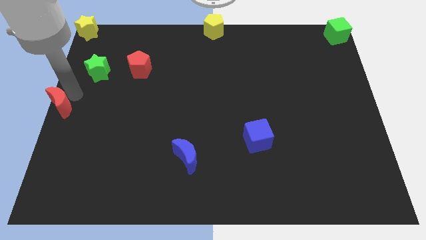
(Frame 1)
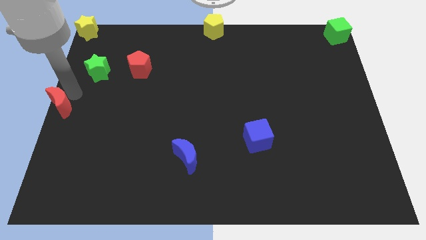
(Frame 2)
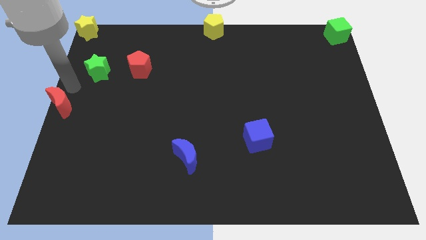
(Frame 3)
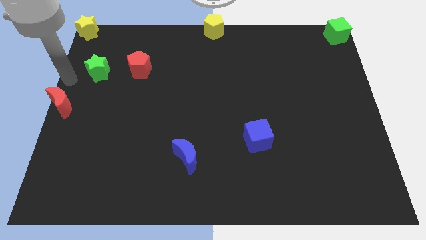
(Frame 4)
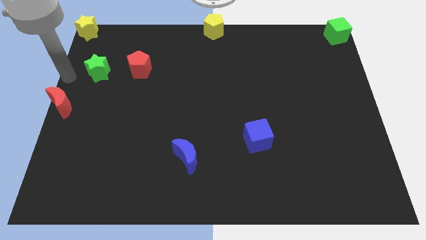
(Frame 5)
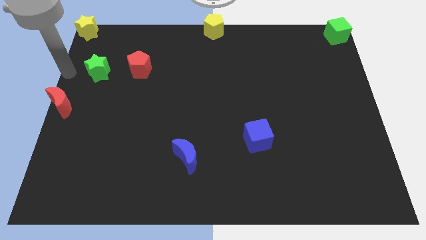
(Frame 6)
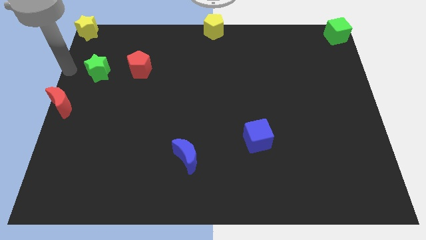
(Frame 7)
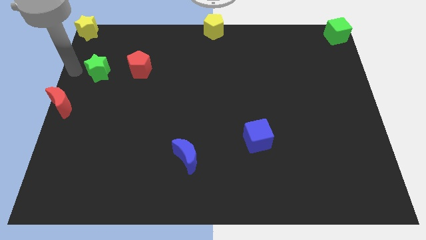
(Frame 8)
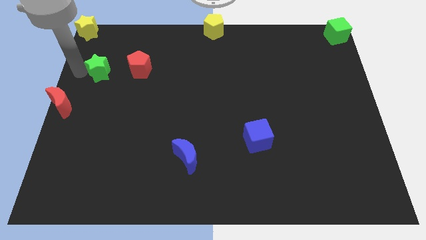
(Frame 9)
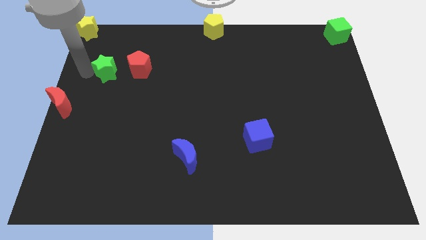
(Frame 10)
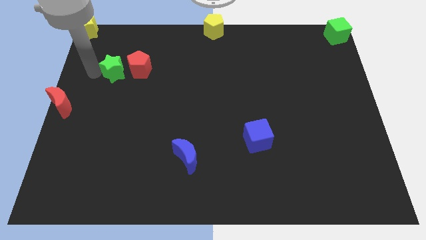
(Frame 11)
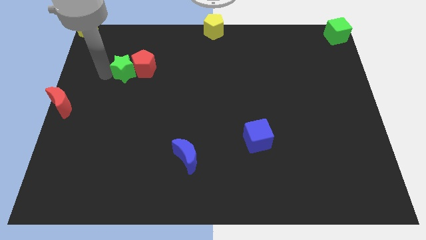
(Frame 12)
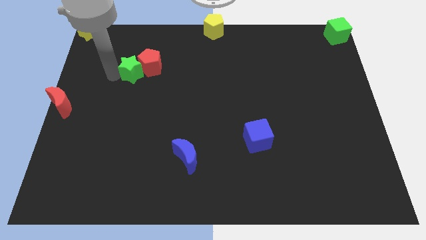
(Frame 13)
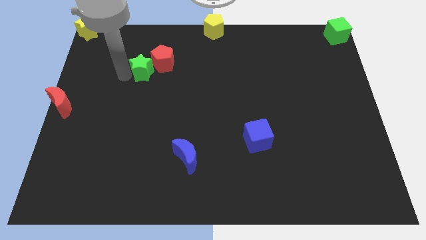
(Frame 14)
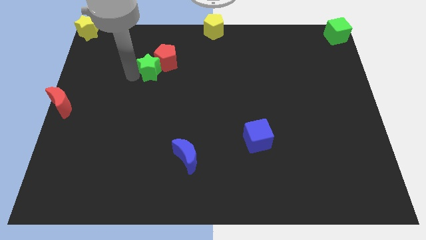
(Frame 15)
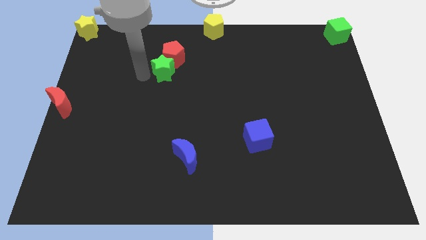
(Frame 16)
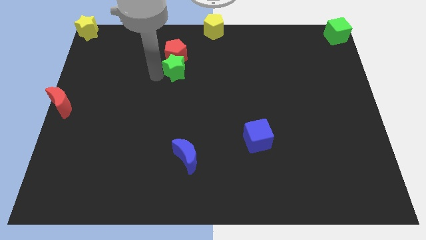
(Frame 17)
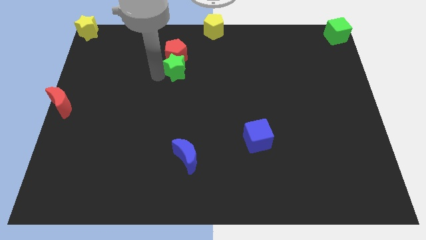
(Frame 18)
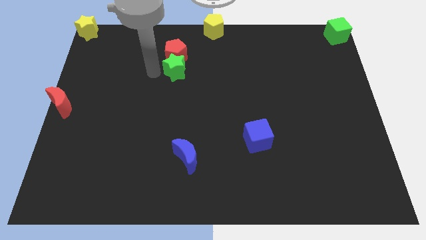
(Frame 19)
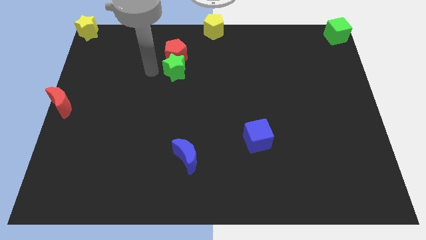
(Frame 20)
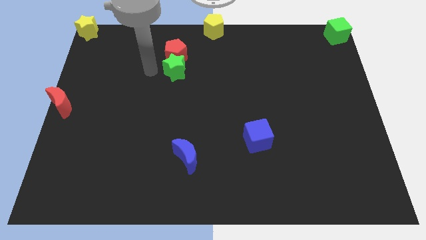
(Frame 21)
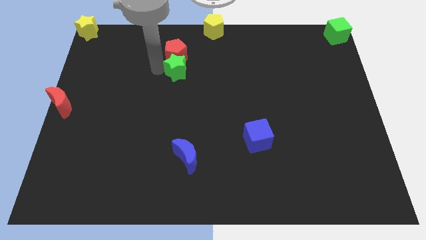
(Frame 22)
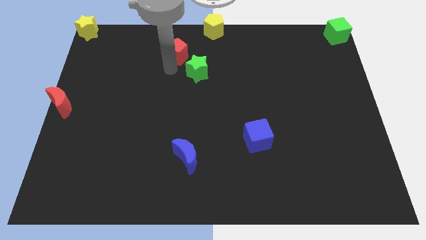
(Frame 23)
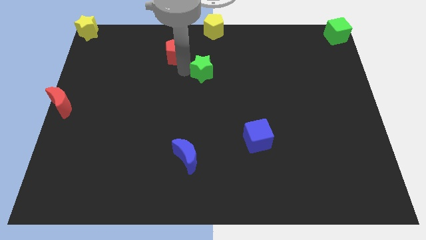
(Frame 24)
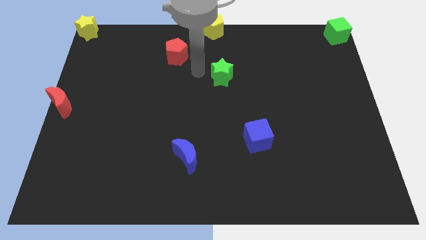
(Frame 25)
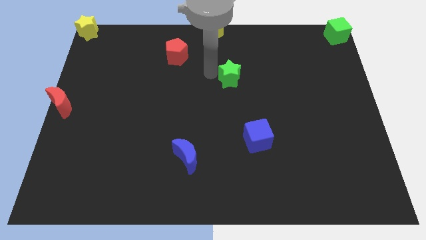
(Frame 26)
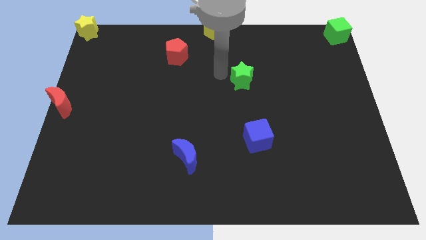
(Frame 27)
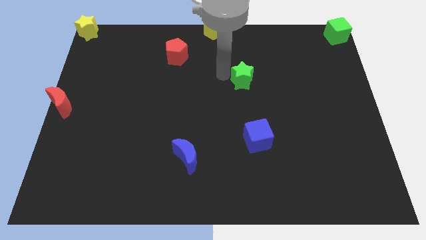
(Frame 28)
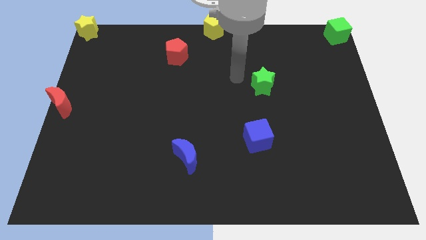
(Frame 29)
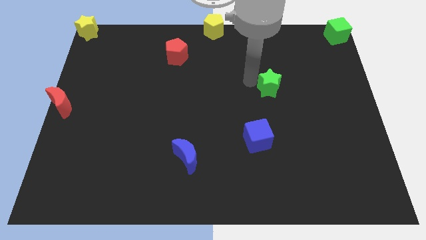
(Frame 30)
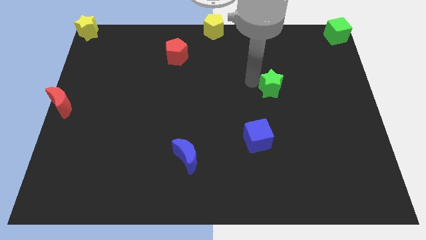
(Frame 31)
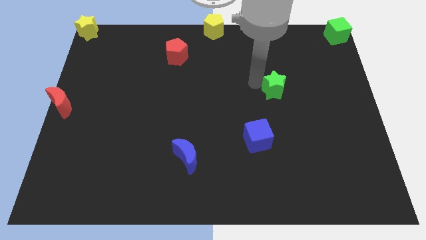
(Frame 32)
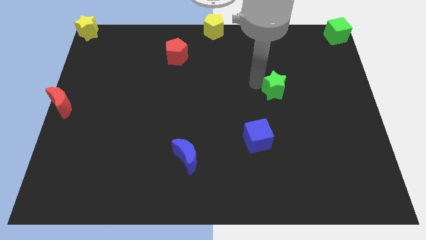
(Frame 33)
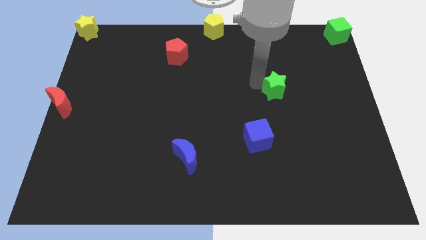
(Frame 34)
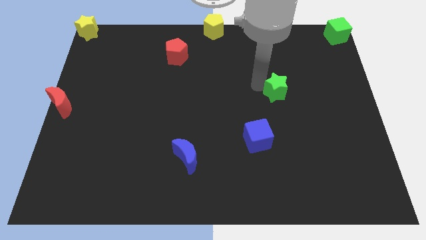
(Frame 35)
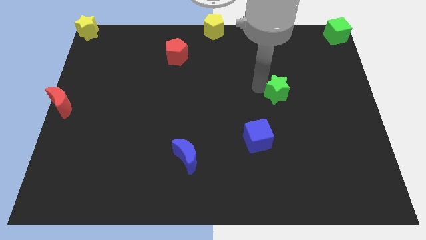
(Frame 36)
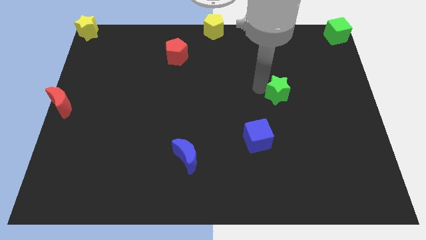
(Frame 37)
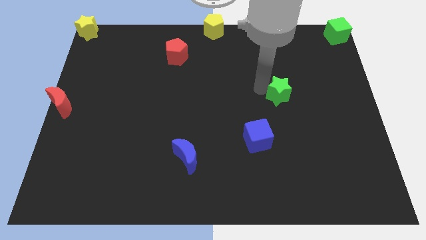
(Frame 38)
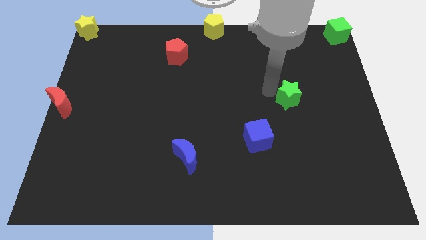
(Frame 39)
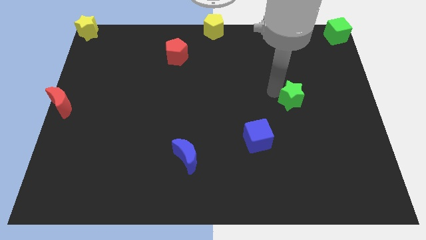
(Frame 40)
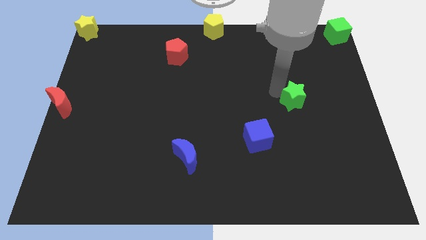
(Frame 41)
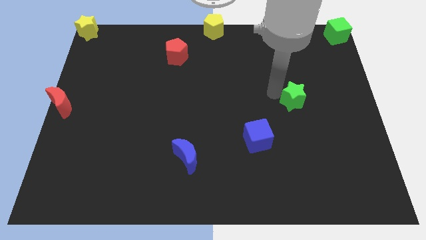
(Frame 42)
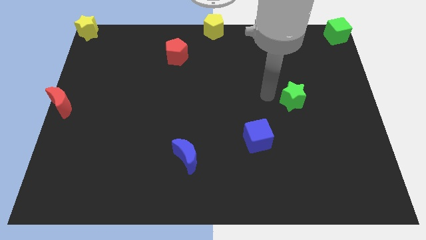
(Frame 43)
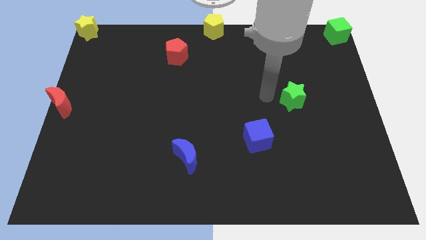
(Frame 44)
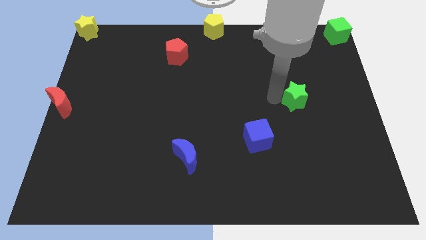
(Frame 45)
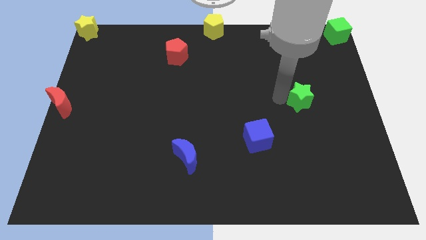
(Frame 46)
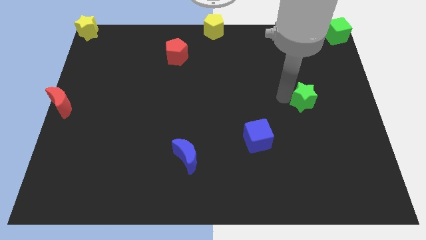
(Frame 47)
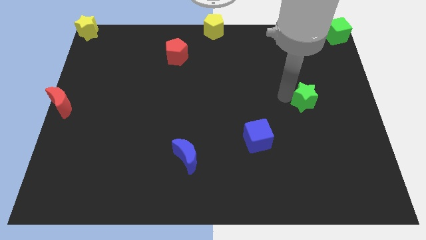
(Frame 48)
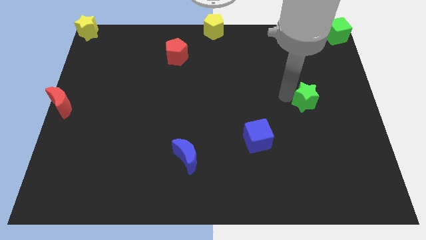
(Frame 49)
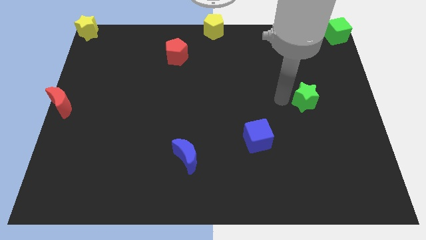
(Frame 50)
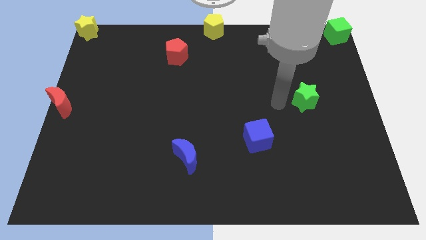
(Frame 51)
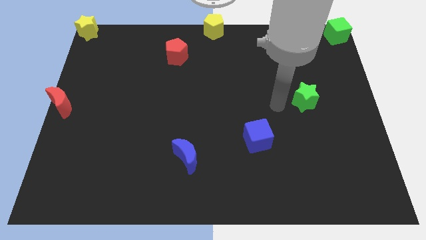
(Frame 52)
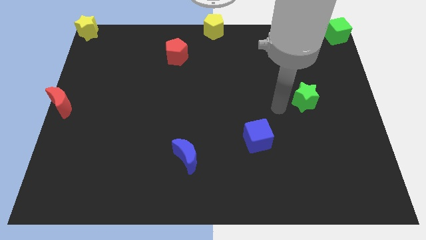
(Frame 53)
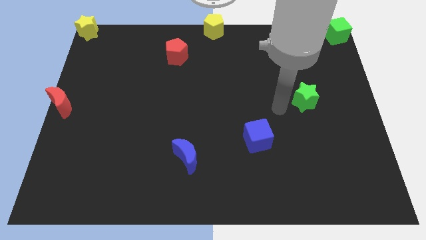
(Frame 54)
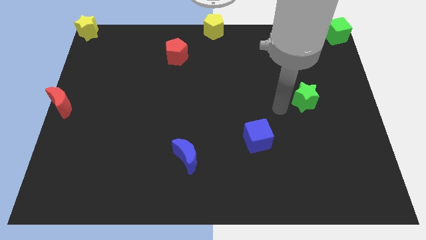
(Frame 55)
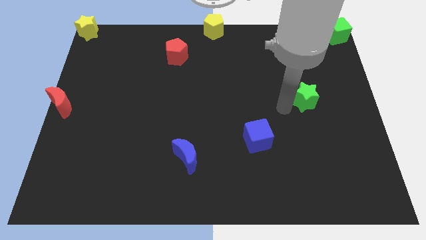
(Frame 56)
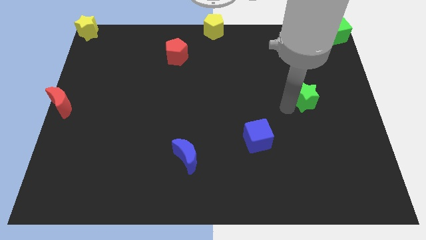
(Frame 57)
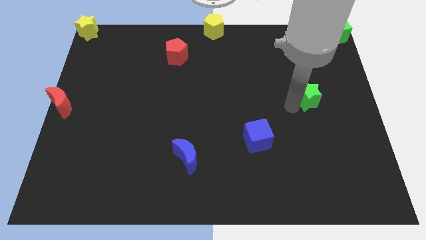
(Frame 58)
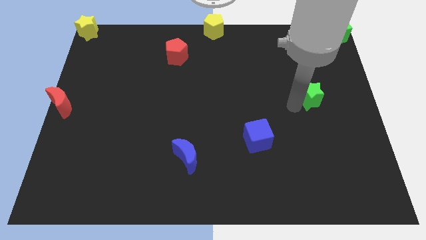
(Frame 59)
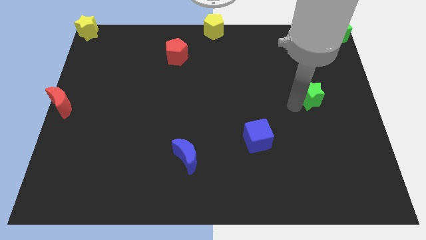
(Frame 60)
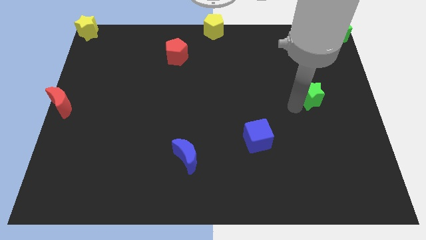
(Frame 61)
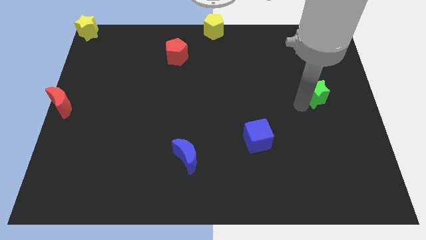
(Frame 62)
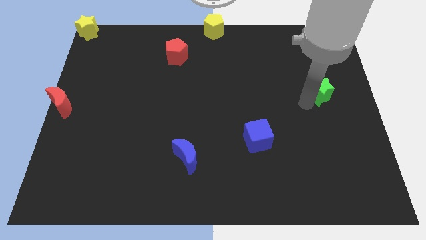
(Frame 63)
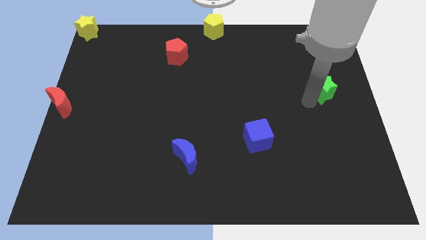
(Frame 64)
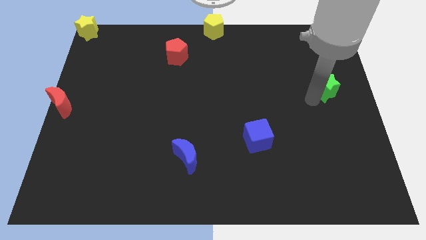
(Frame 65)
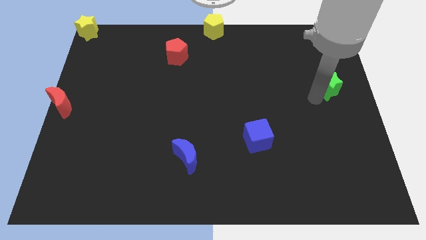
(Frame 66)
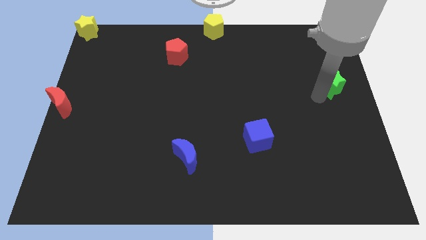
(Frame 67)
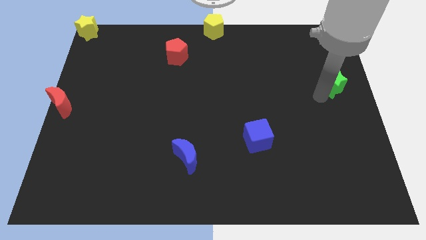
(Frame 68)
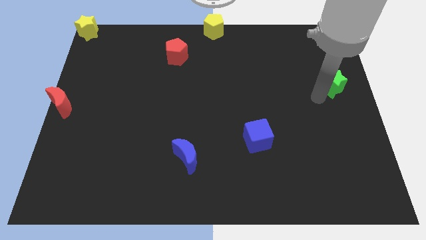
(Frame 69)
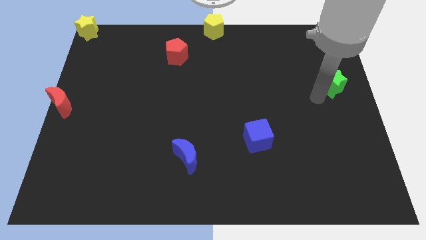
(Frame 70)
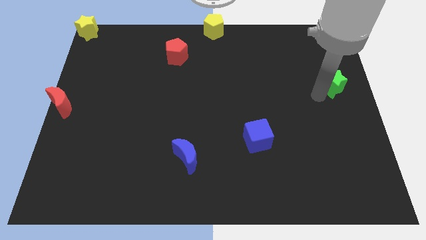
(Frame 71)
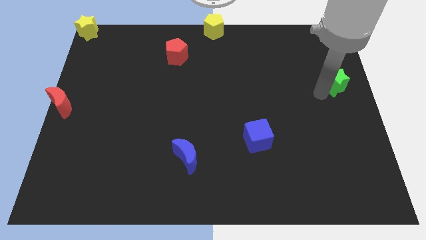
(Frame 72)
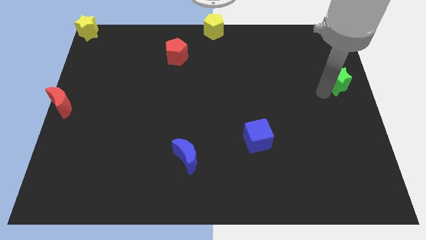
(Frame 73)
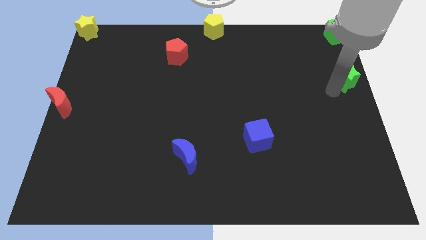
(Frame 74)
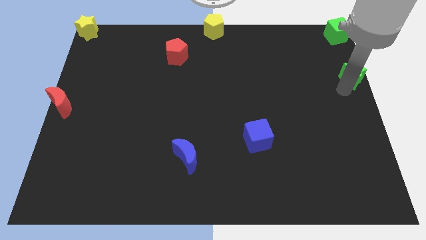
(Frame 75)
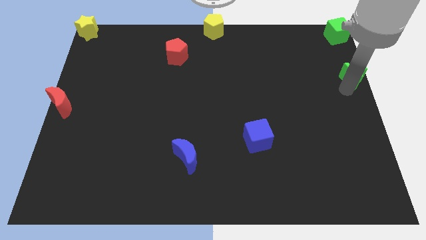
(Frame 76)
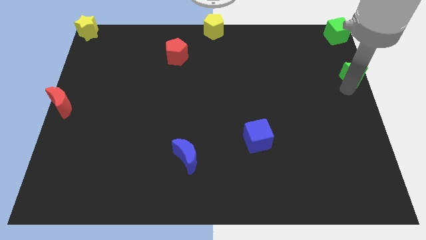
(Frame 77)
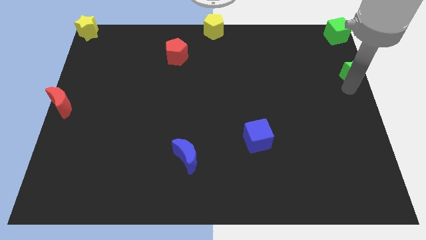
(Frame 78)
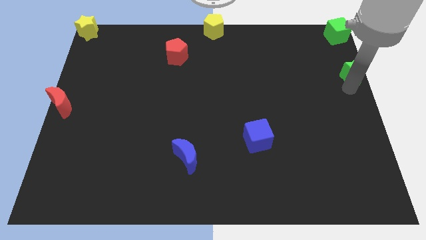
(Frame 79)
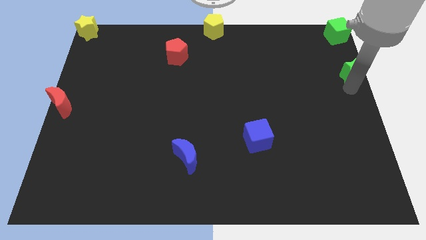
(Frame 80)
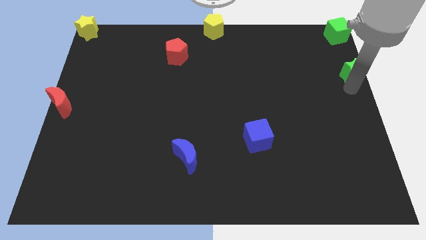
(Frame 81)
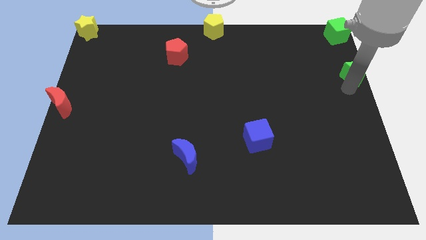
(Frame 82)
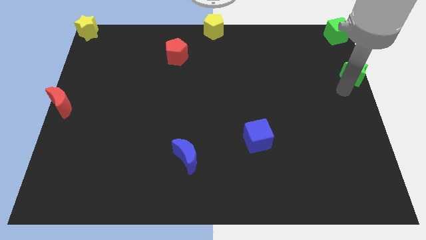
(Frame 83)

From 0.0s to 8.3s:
push the green star from the left side to the right side of the board

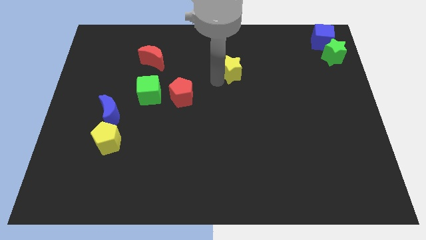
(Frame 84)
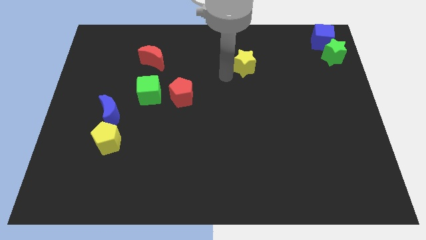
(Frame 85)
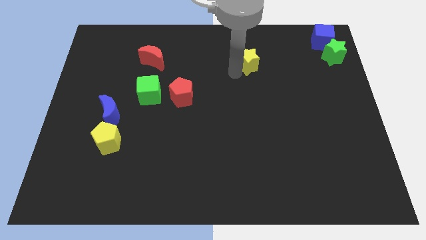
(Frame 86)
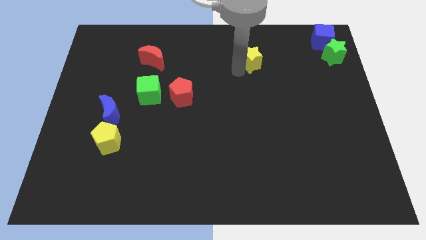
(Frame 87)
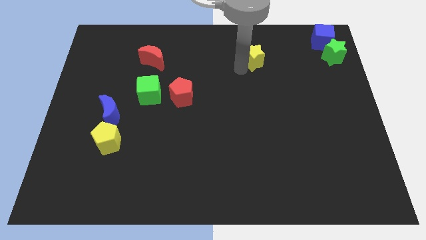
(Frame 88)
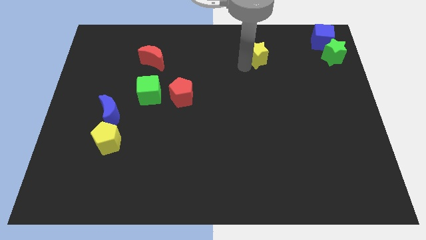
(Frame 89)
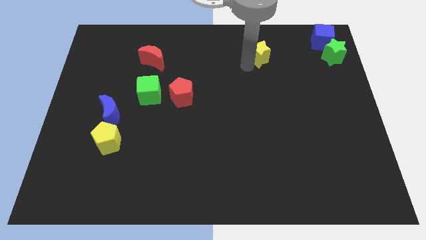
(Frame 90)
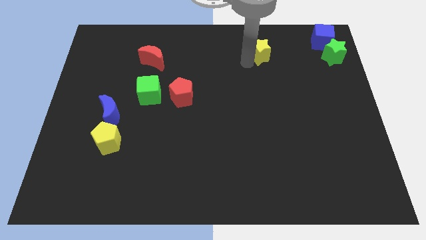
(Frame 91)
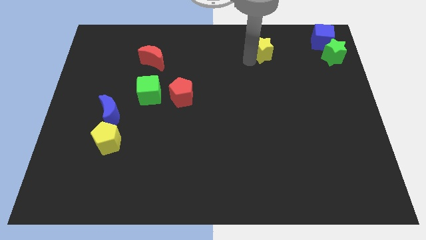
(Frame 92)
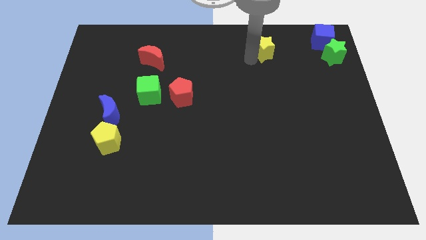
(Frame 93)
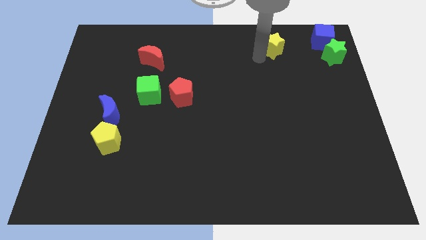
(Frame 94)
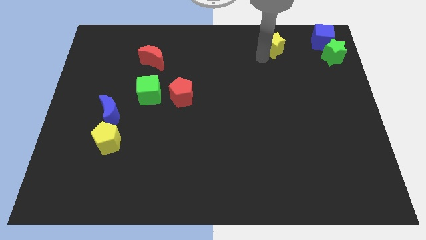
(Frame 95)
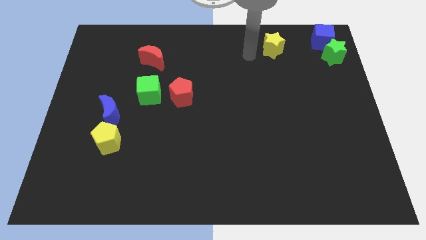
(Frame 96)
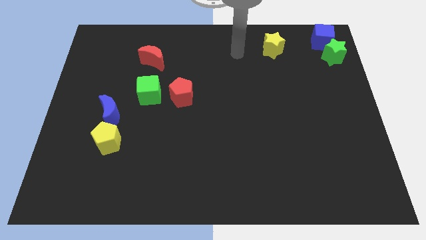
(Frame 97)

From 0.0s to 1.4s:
place the yellow star to the left side of the green star
